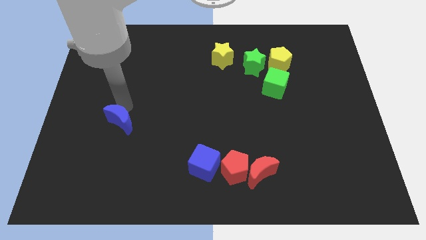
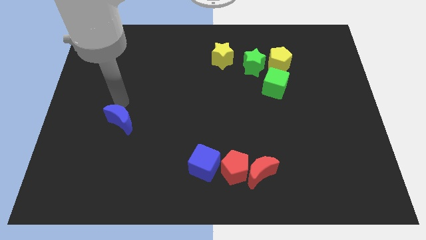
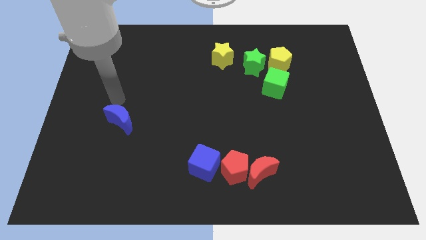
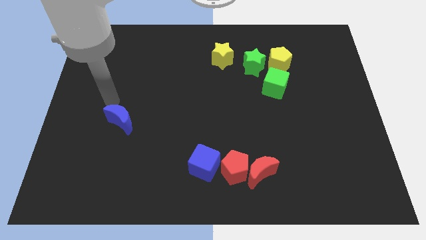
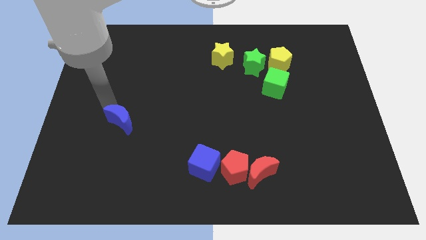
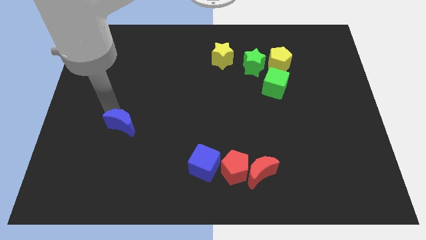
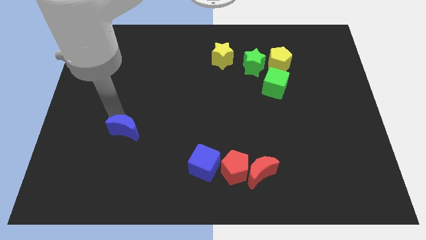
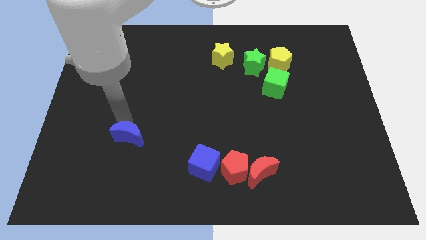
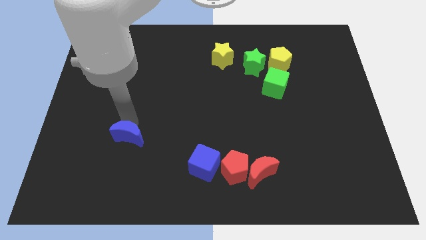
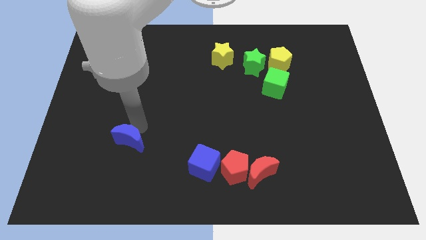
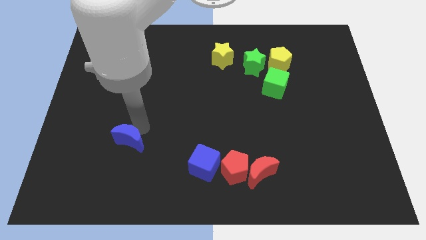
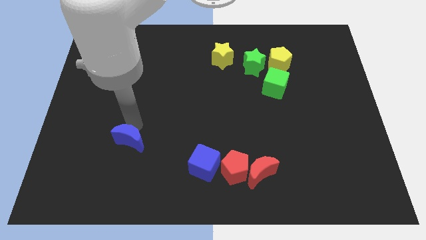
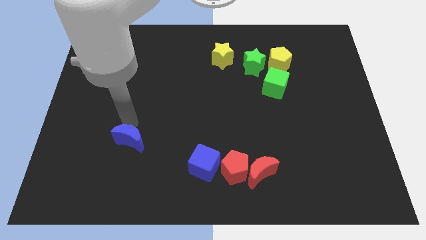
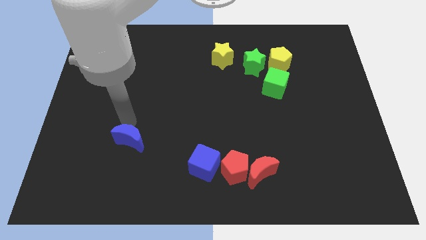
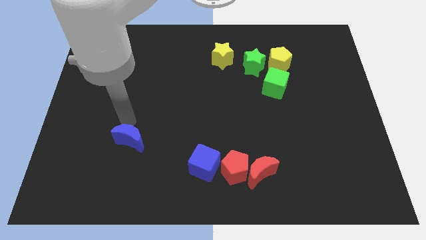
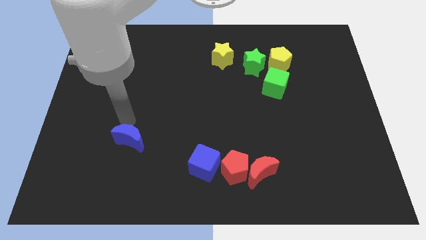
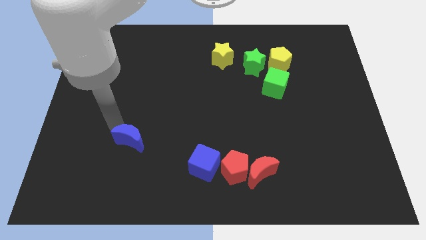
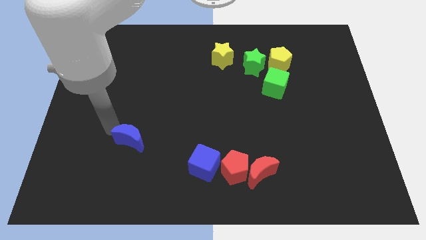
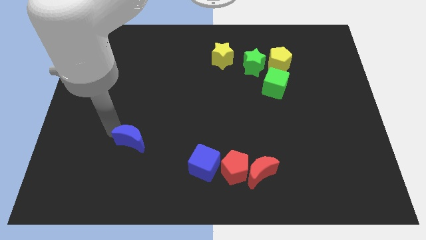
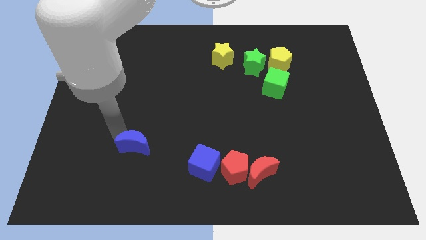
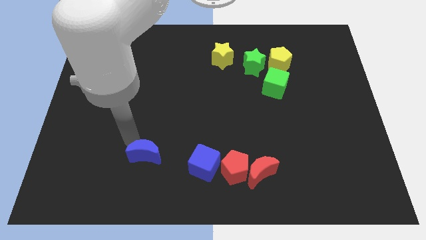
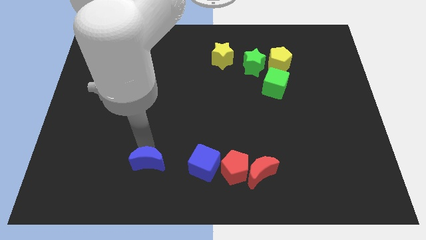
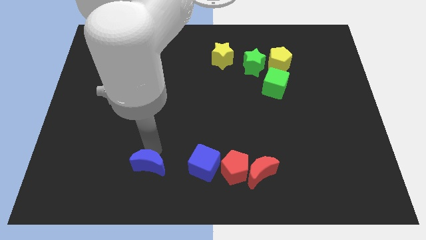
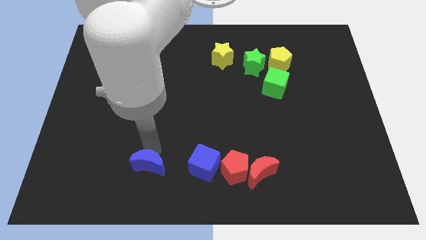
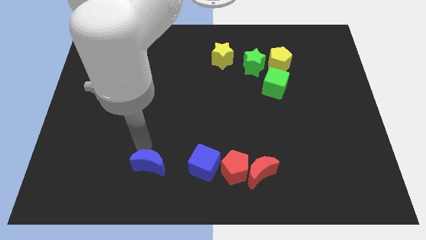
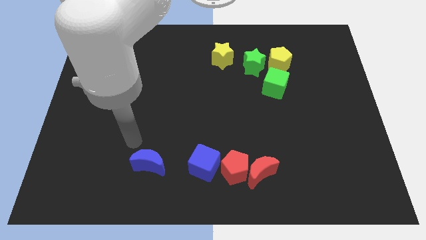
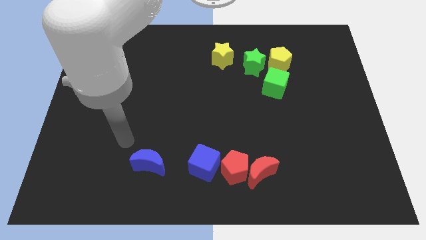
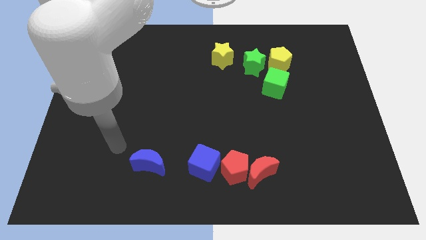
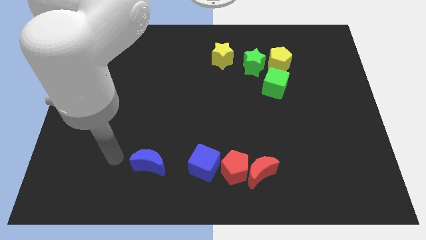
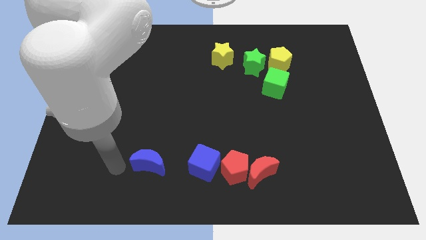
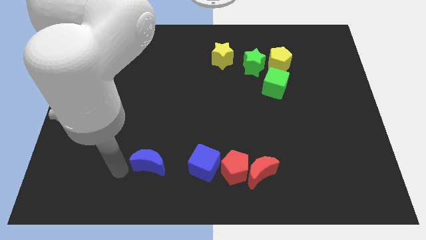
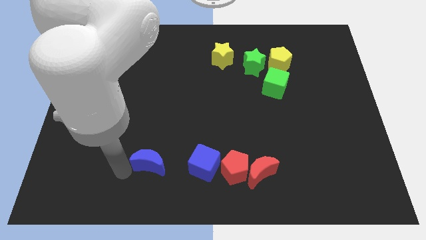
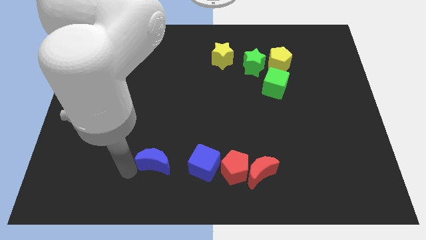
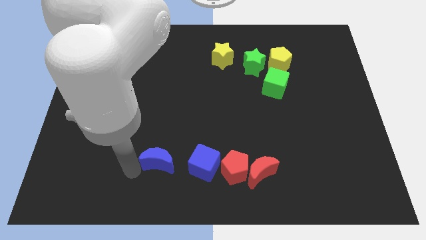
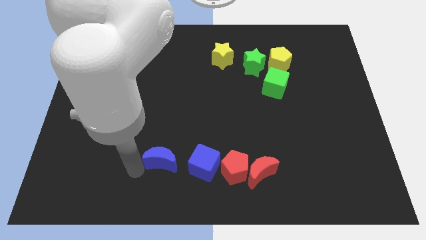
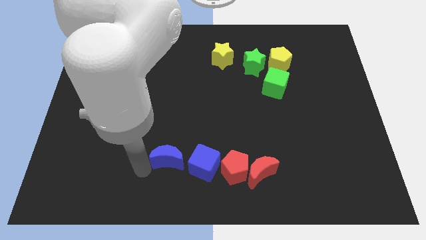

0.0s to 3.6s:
move blue moon towards blue cube

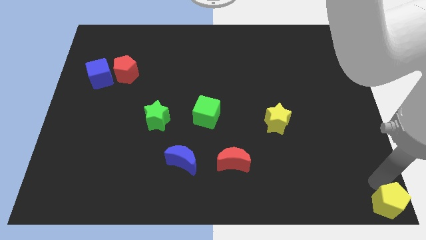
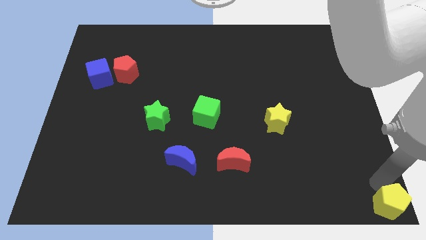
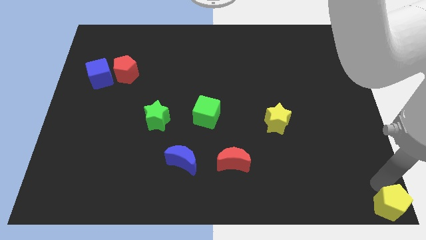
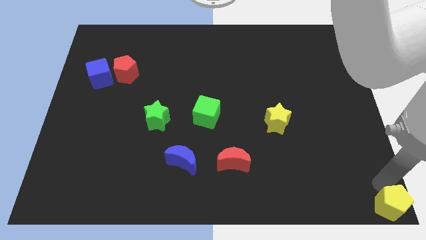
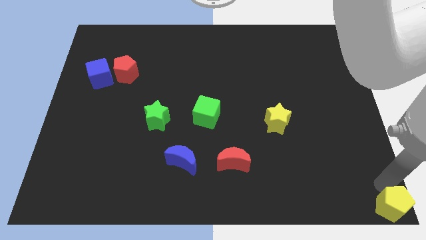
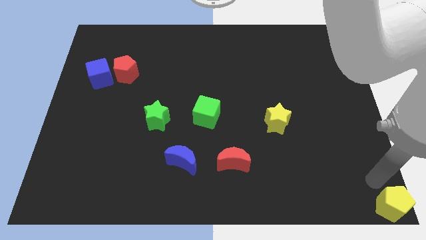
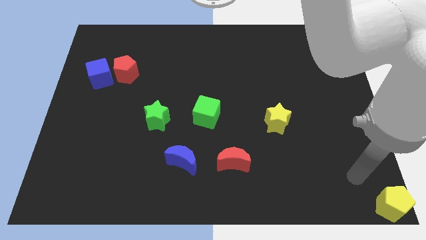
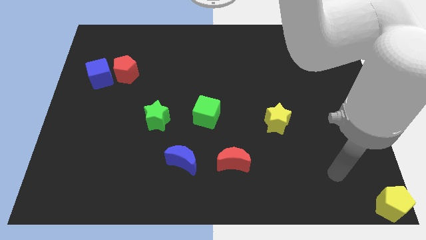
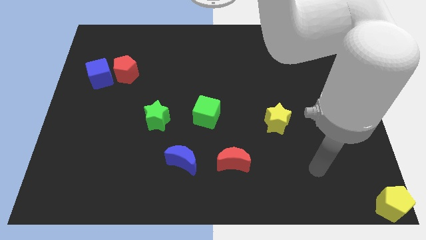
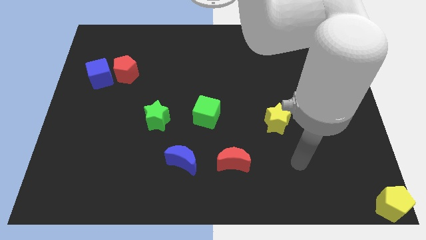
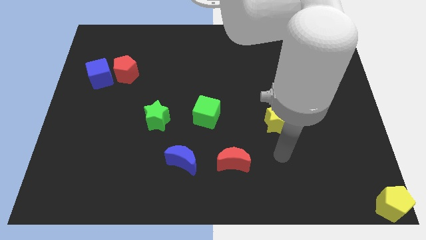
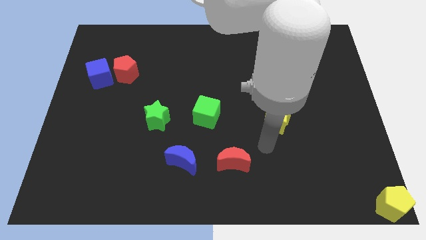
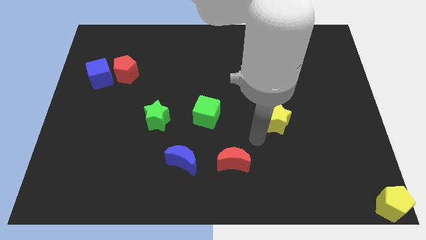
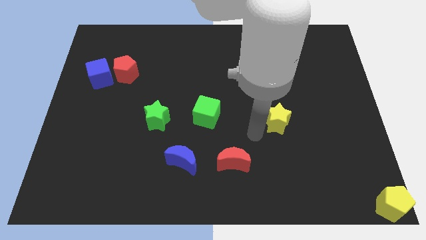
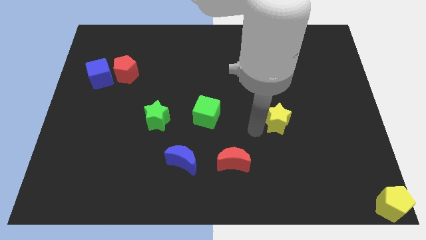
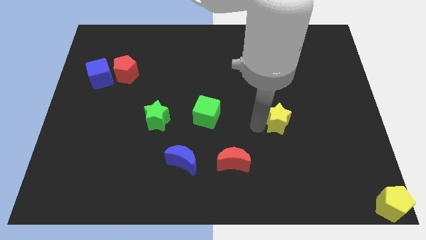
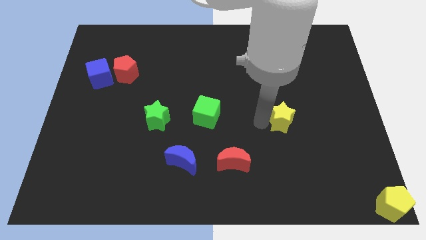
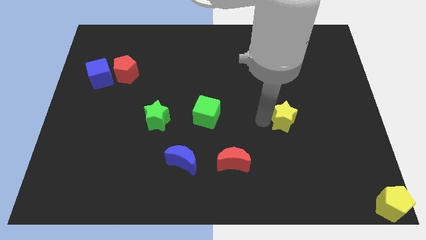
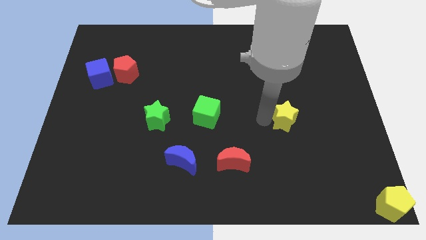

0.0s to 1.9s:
move yellow star slightly to the right

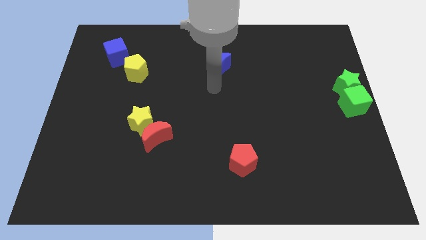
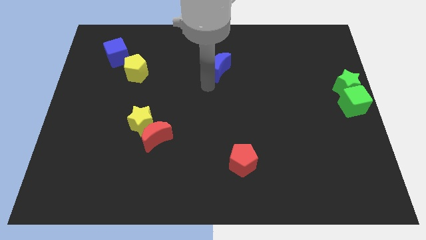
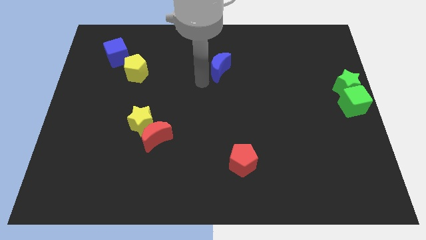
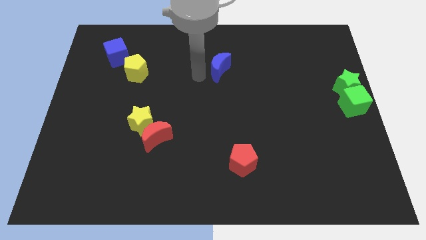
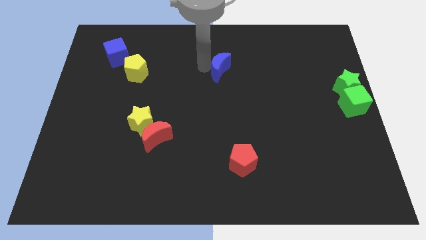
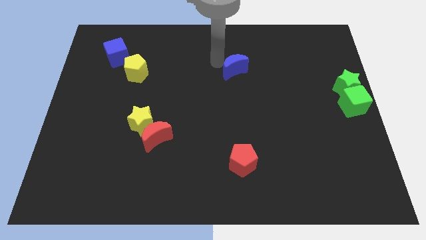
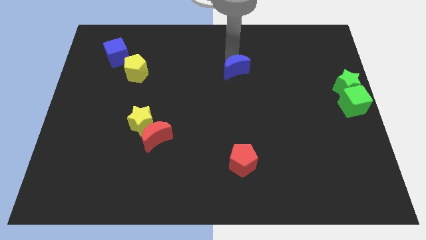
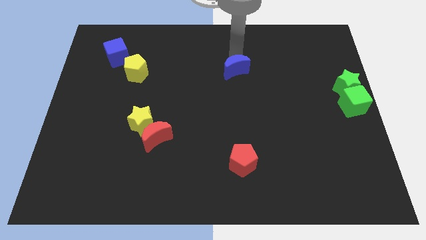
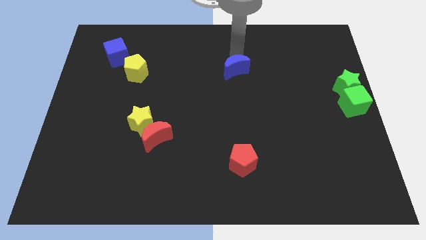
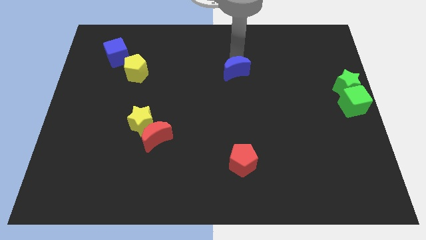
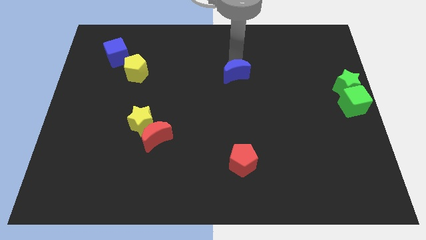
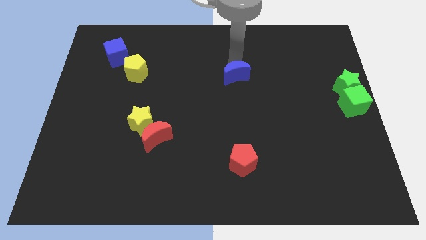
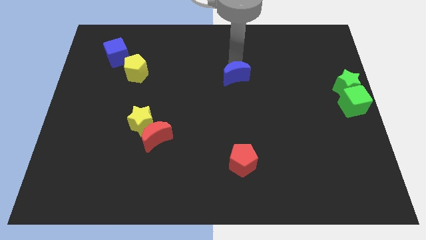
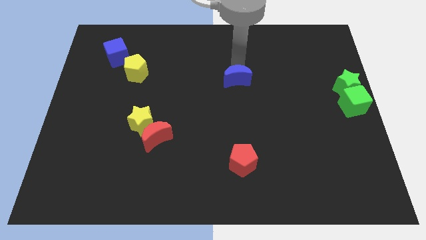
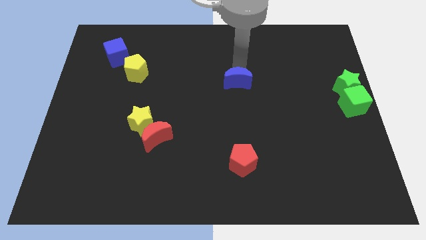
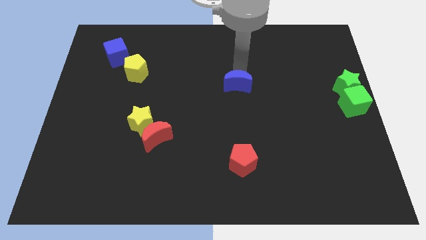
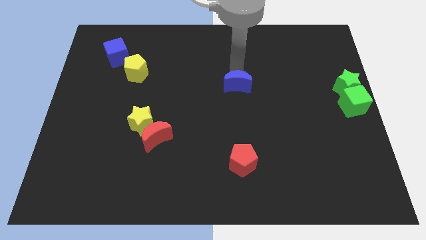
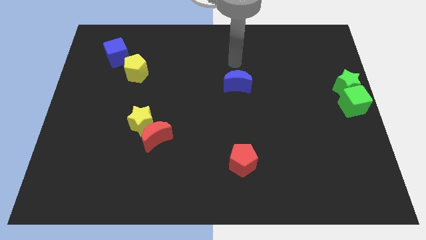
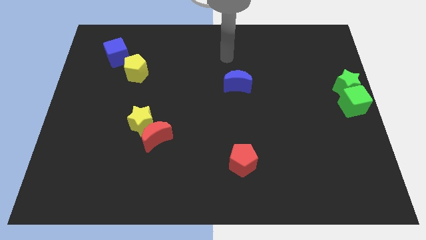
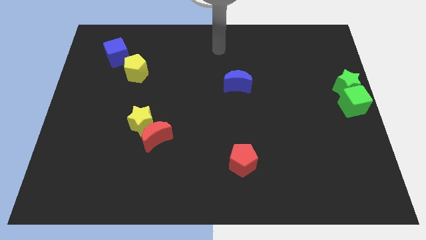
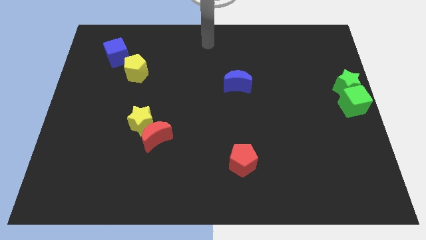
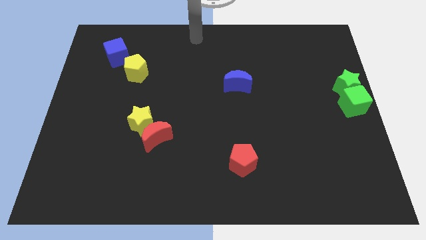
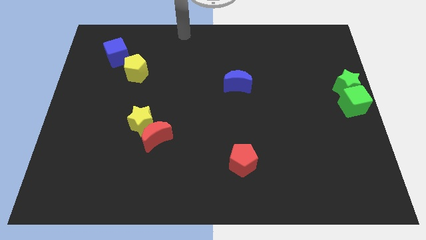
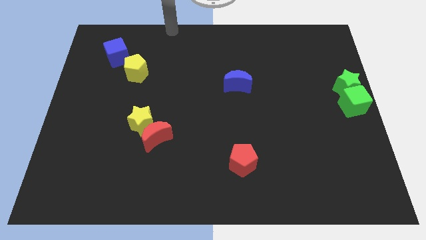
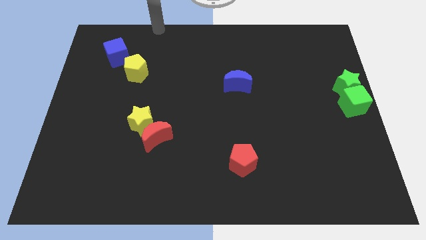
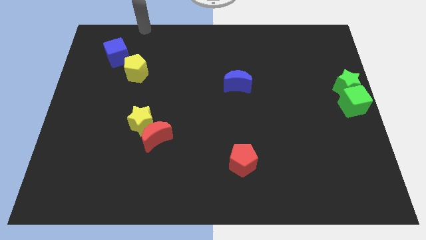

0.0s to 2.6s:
push the blue crescent slightly downwards

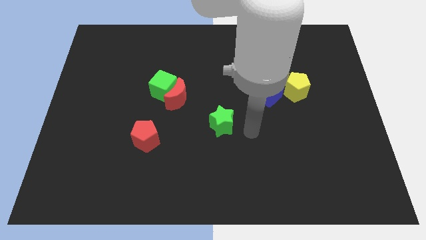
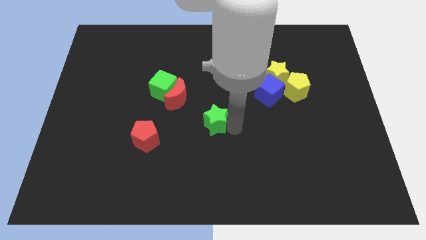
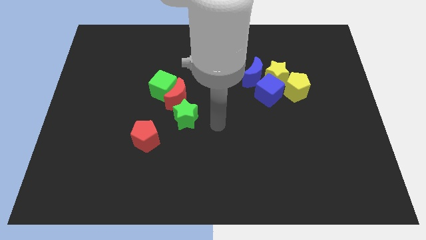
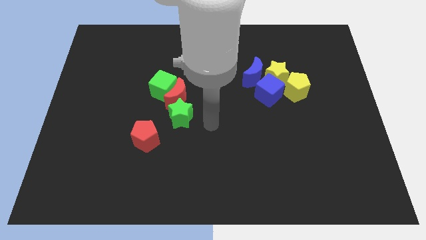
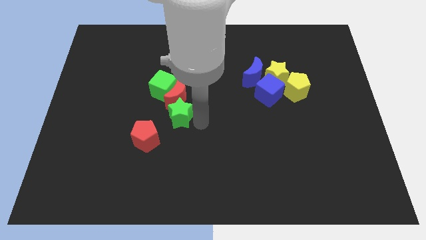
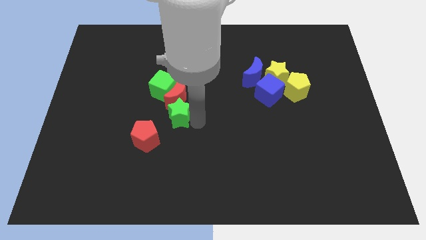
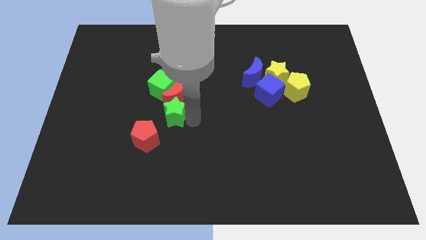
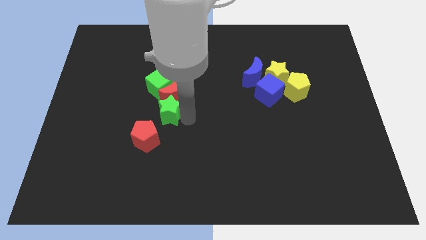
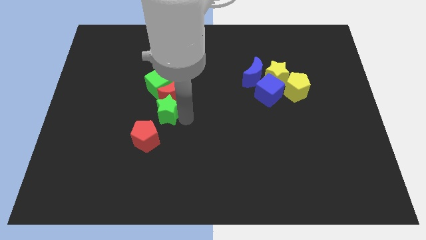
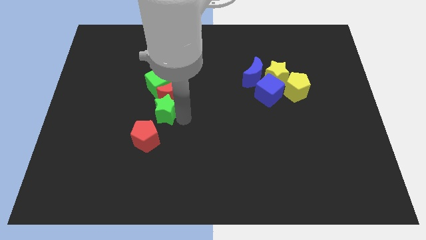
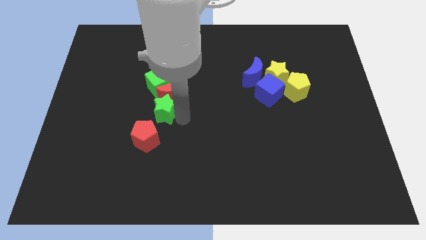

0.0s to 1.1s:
push the green star into the red crescent

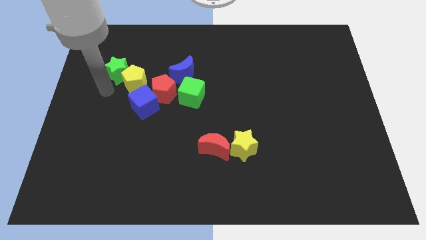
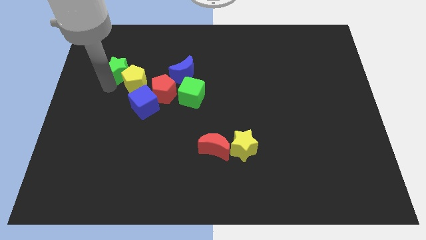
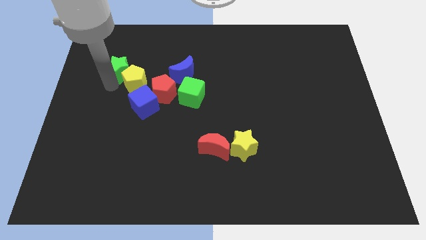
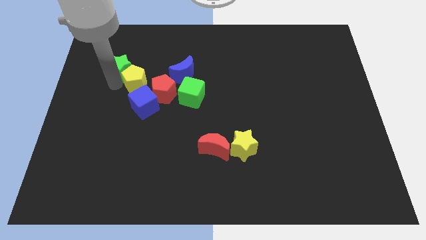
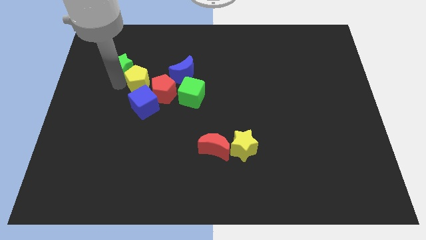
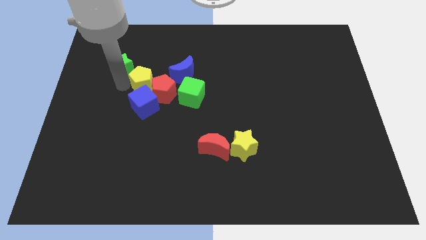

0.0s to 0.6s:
push the green star into the yellow pentagon
